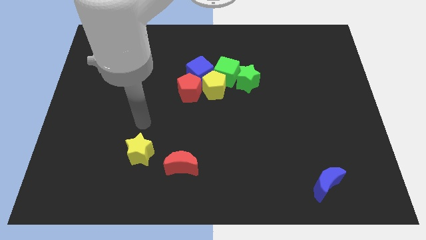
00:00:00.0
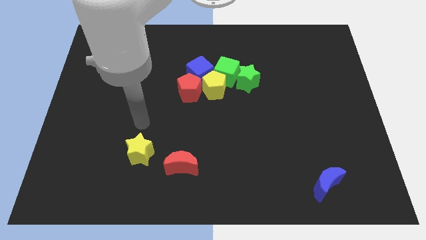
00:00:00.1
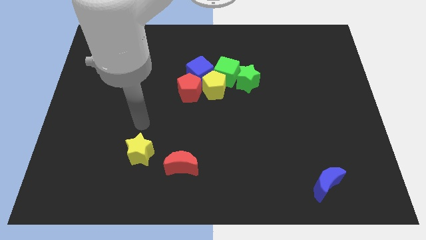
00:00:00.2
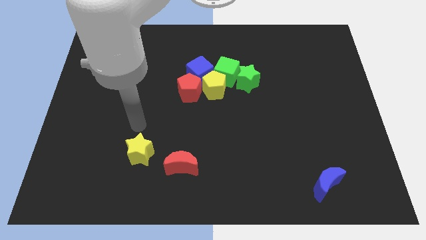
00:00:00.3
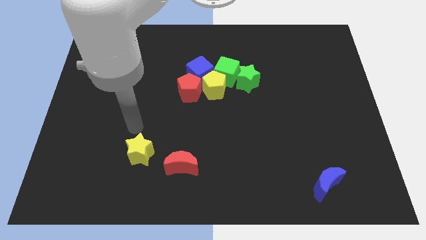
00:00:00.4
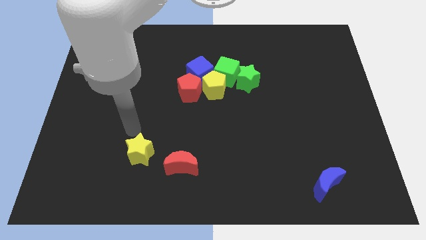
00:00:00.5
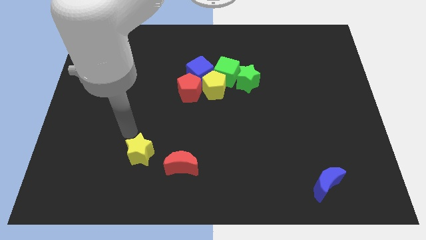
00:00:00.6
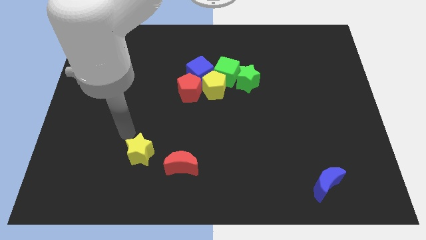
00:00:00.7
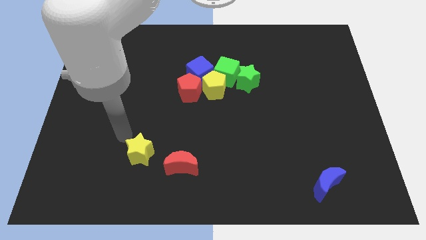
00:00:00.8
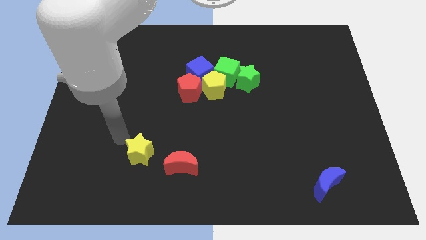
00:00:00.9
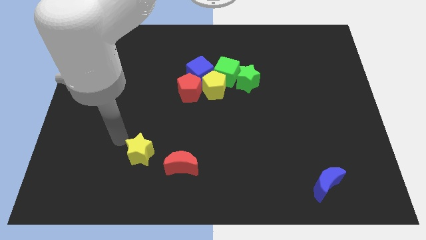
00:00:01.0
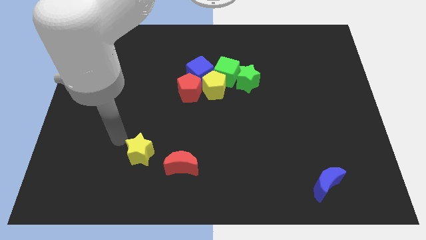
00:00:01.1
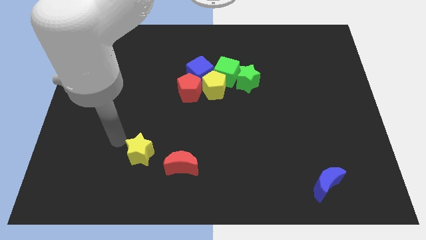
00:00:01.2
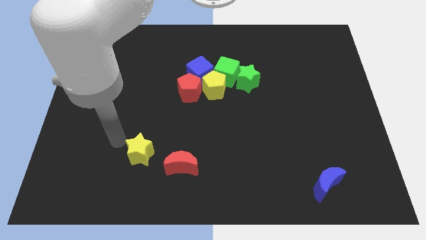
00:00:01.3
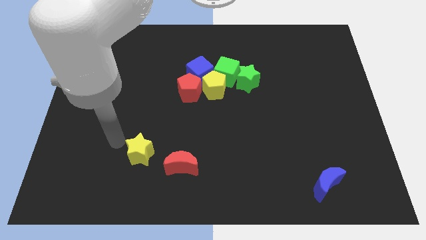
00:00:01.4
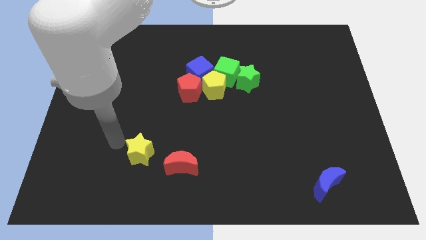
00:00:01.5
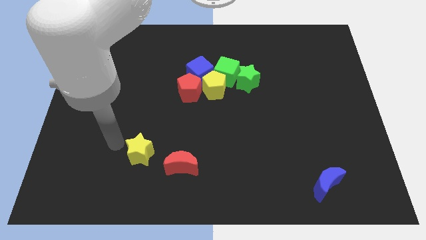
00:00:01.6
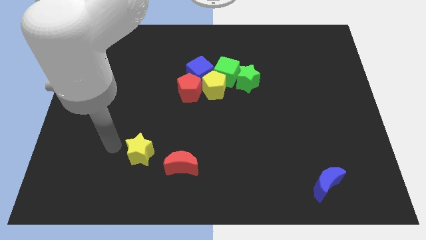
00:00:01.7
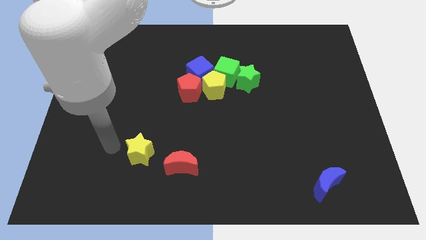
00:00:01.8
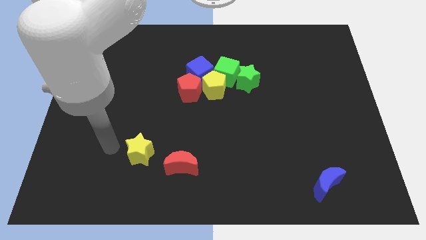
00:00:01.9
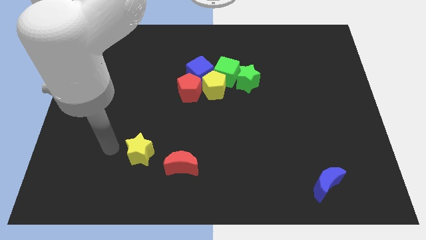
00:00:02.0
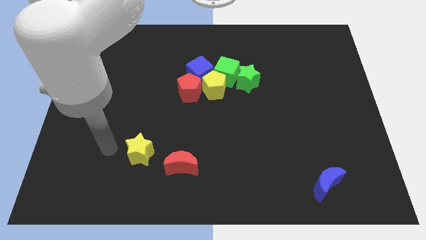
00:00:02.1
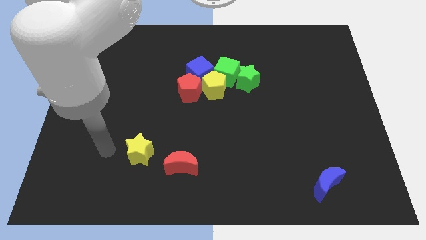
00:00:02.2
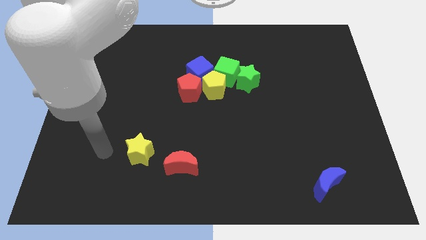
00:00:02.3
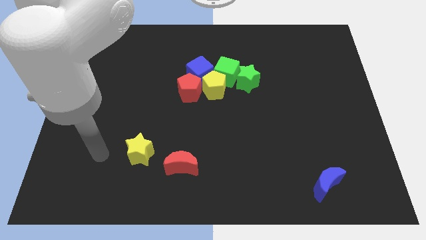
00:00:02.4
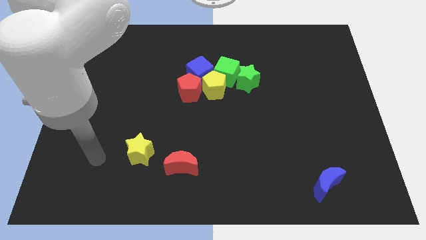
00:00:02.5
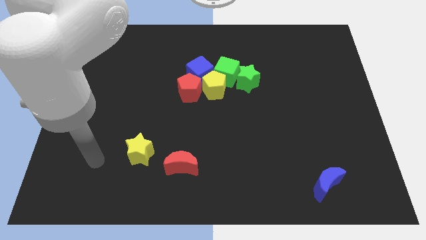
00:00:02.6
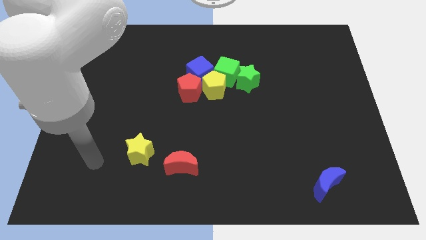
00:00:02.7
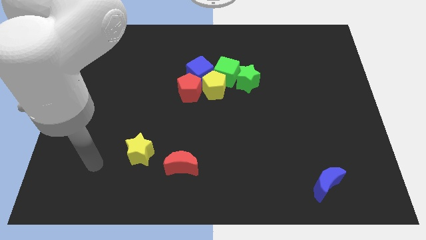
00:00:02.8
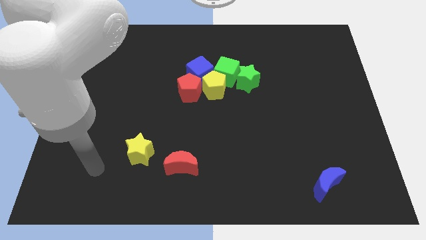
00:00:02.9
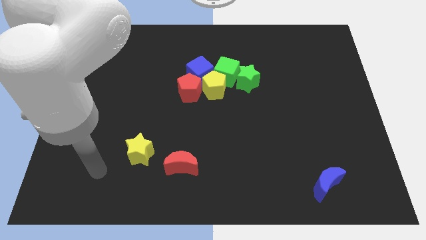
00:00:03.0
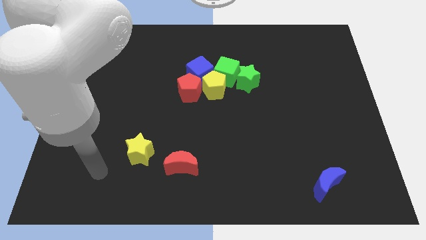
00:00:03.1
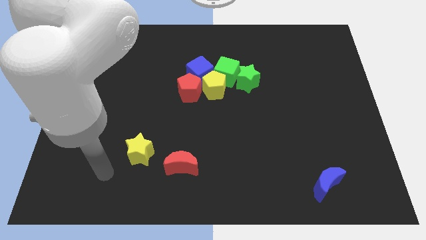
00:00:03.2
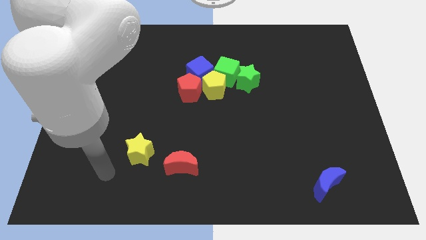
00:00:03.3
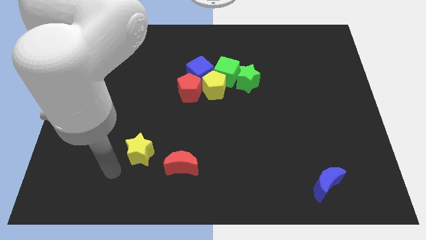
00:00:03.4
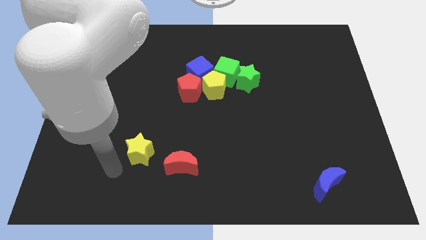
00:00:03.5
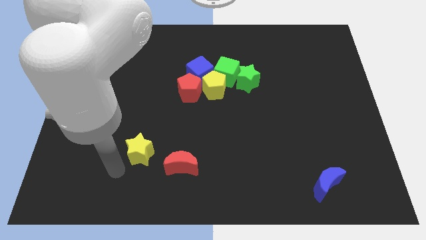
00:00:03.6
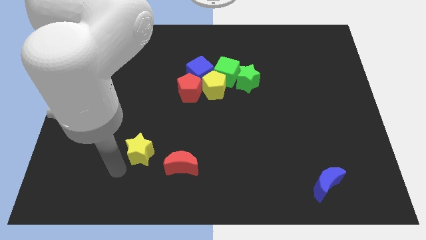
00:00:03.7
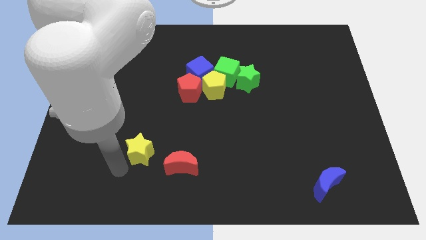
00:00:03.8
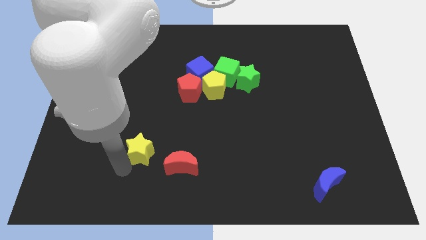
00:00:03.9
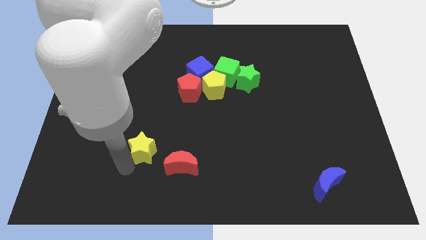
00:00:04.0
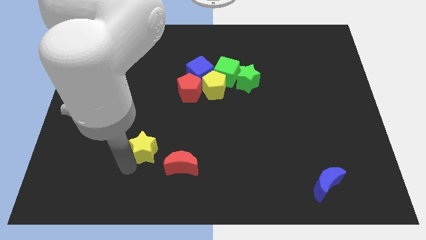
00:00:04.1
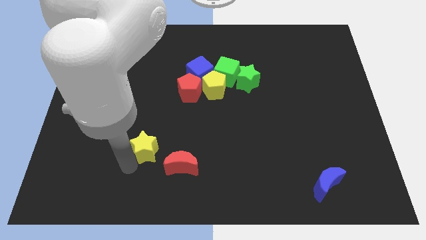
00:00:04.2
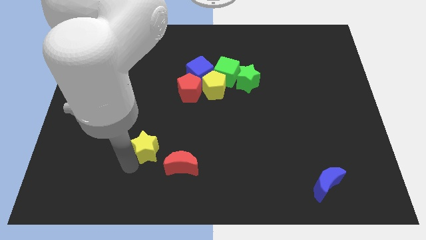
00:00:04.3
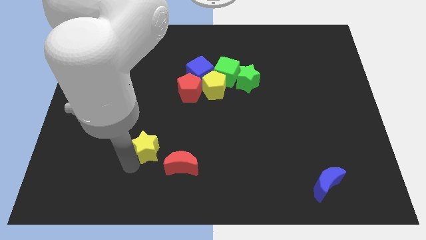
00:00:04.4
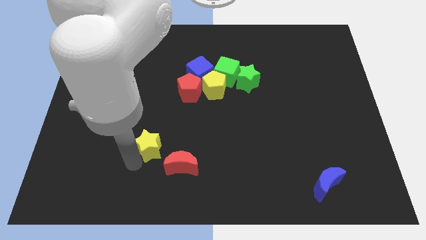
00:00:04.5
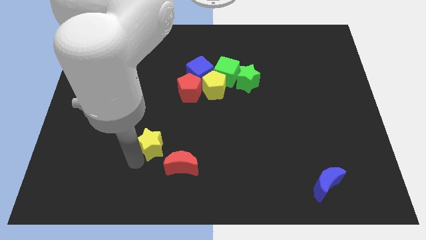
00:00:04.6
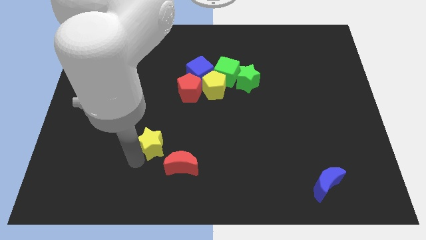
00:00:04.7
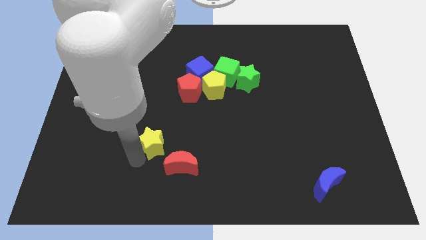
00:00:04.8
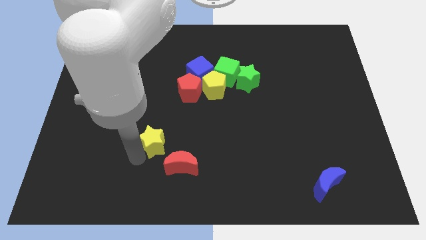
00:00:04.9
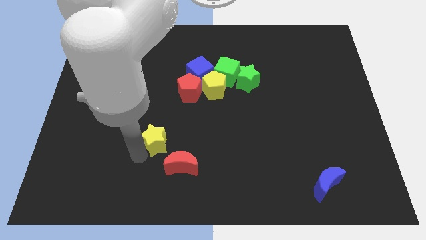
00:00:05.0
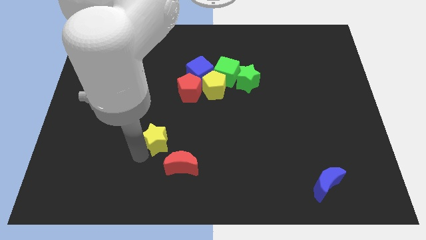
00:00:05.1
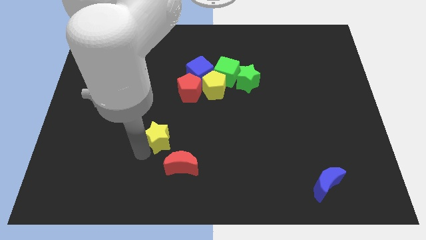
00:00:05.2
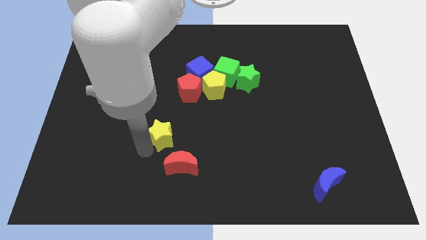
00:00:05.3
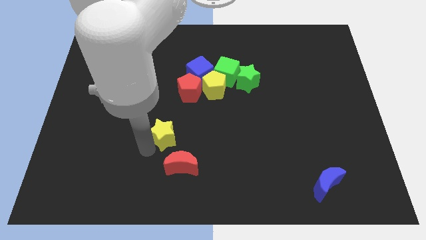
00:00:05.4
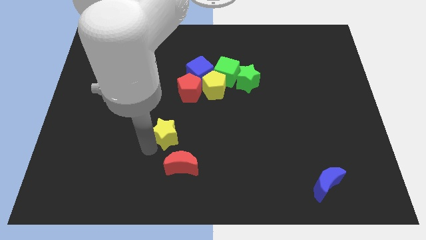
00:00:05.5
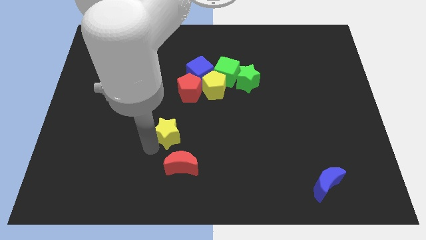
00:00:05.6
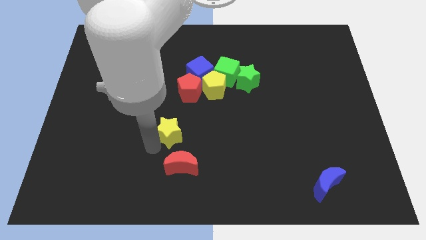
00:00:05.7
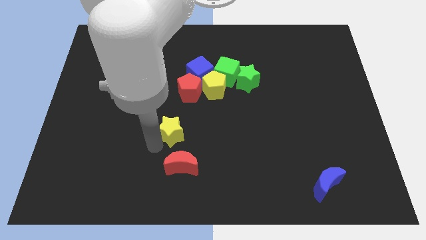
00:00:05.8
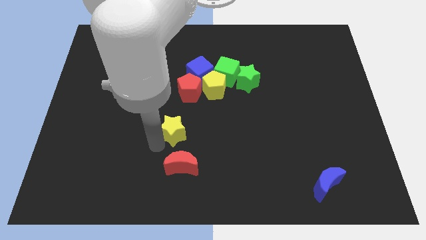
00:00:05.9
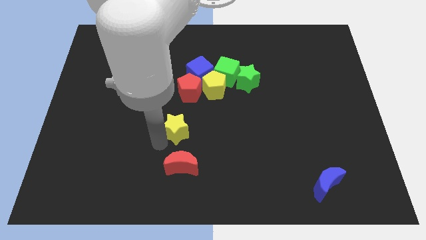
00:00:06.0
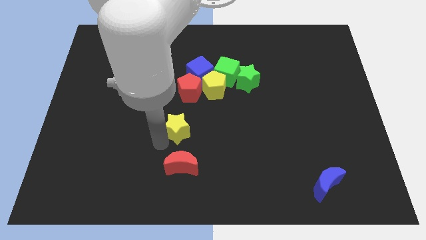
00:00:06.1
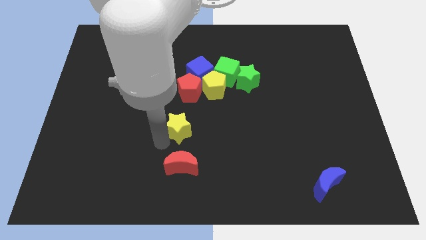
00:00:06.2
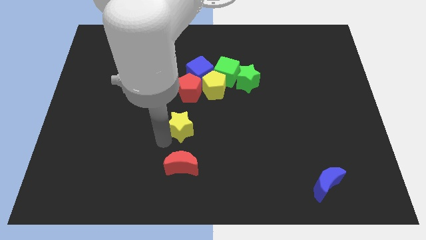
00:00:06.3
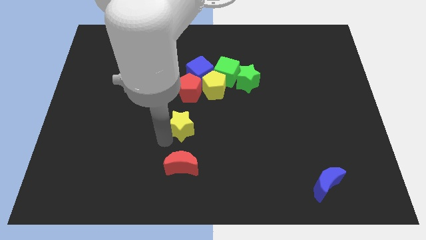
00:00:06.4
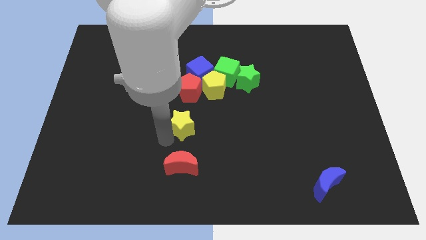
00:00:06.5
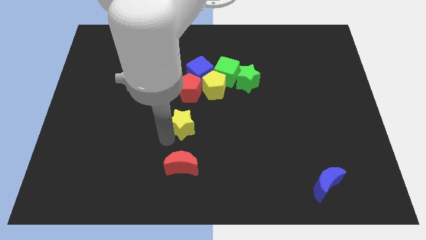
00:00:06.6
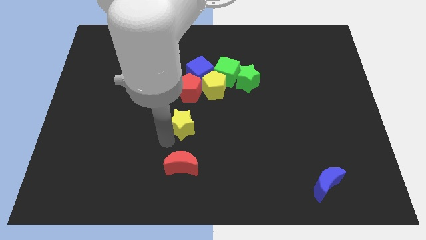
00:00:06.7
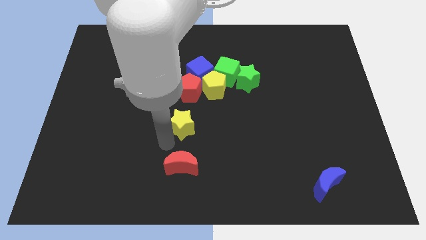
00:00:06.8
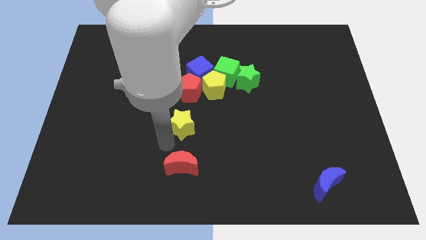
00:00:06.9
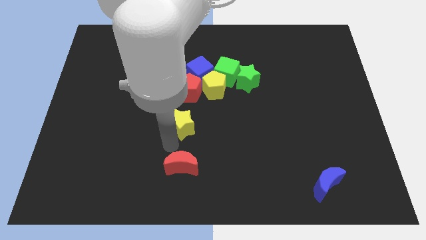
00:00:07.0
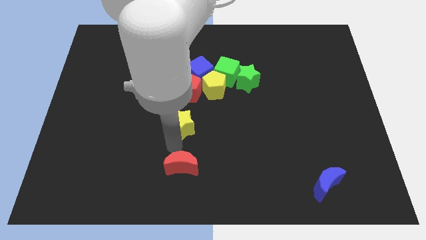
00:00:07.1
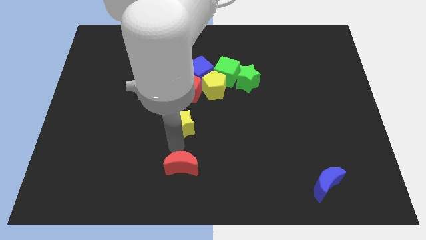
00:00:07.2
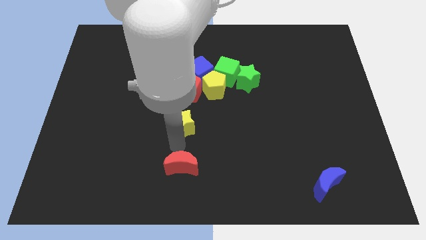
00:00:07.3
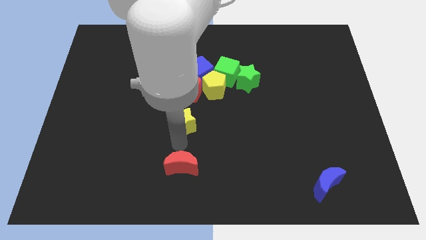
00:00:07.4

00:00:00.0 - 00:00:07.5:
push the yellow star below the red pentagon

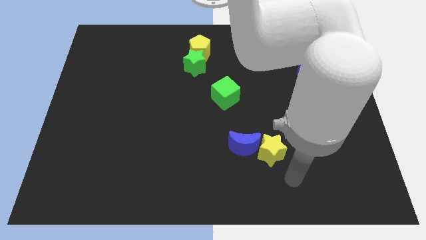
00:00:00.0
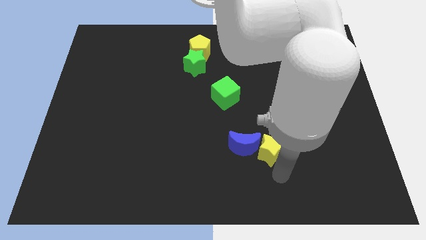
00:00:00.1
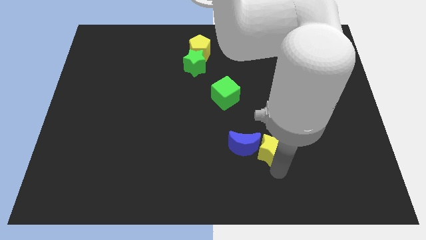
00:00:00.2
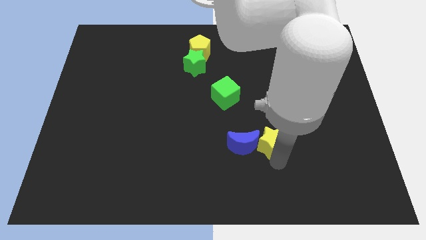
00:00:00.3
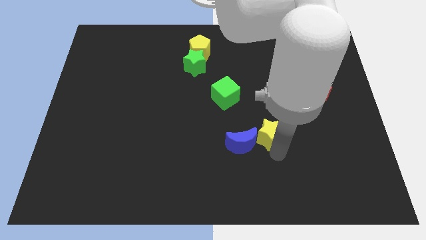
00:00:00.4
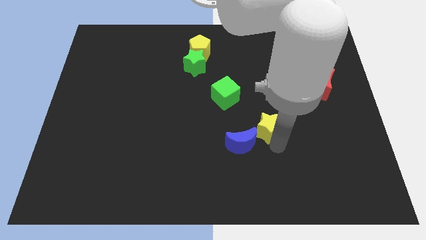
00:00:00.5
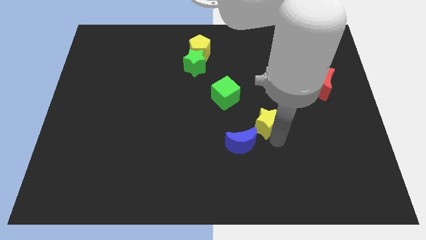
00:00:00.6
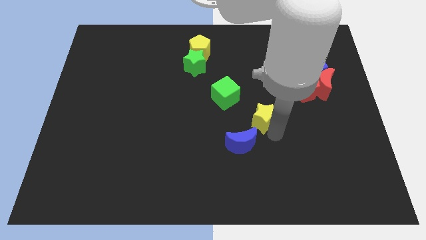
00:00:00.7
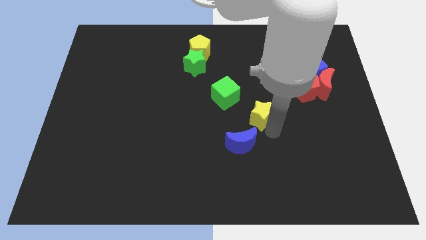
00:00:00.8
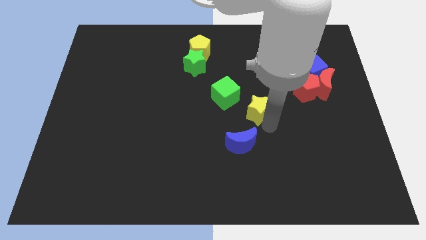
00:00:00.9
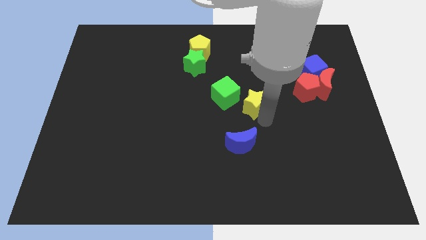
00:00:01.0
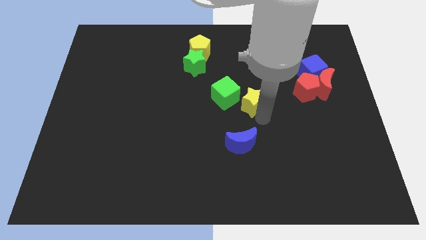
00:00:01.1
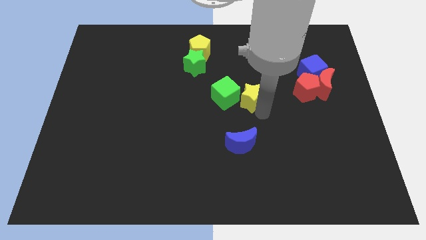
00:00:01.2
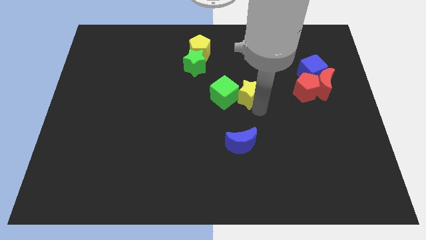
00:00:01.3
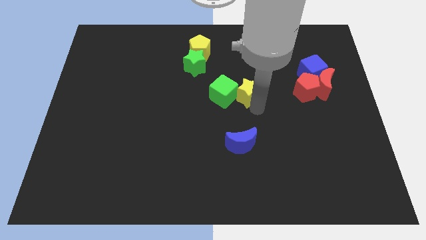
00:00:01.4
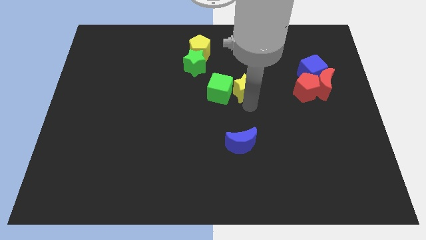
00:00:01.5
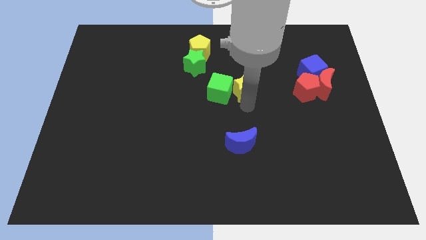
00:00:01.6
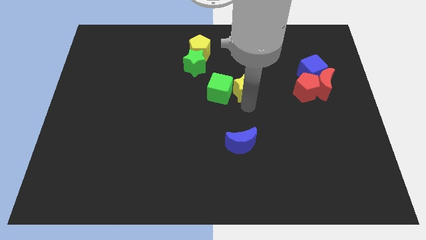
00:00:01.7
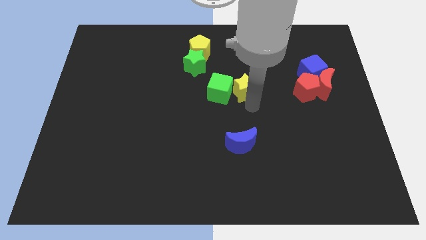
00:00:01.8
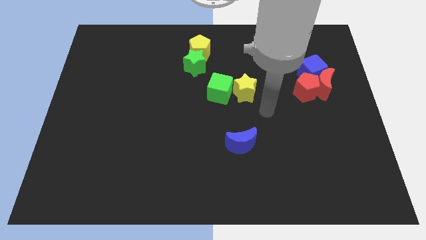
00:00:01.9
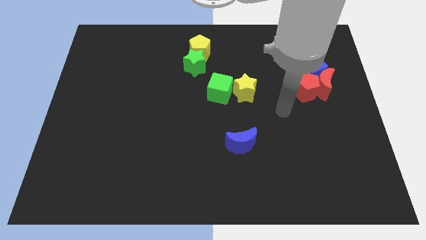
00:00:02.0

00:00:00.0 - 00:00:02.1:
push the yellow star into the green cube
